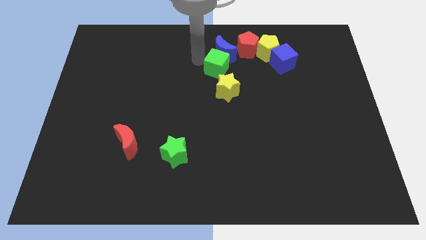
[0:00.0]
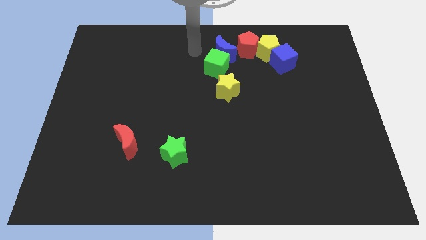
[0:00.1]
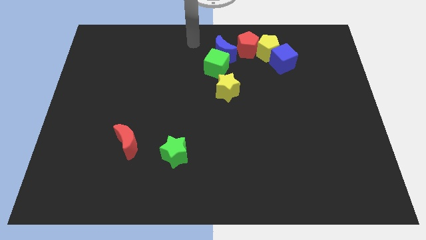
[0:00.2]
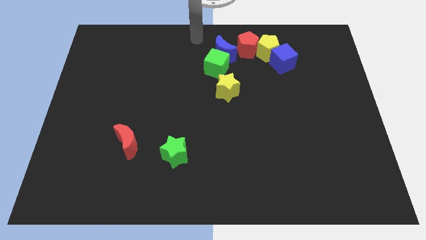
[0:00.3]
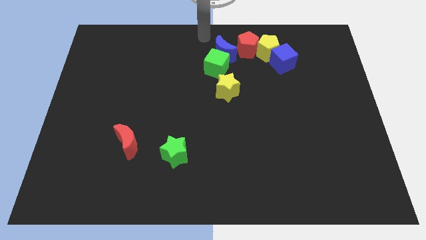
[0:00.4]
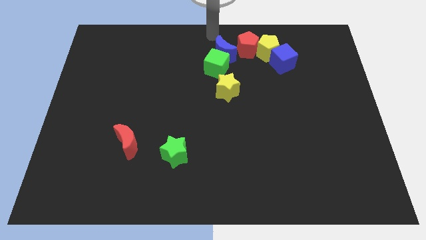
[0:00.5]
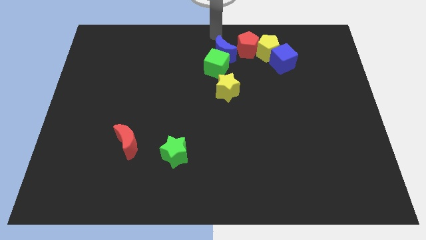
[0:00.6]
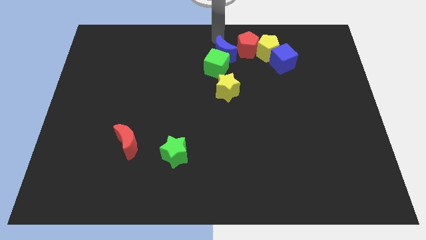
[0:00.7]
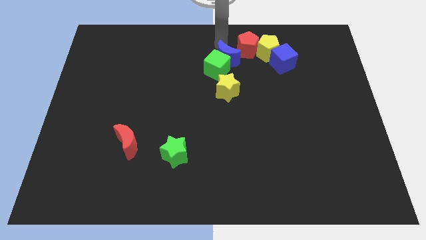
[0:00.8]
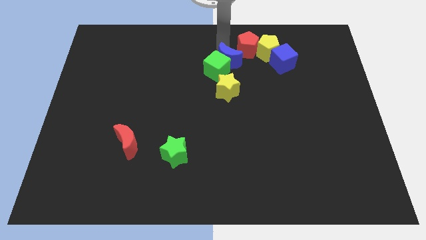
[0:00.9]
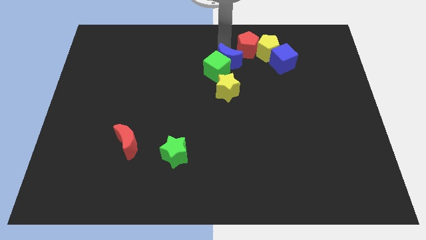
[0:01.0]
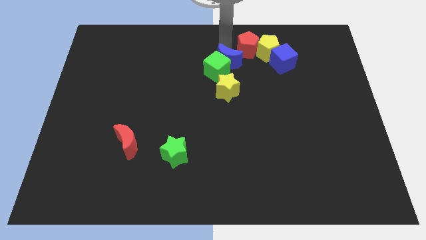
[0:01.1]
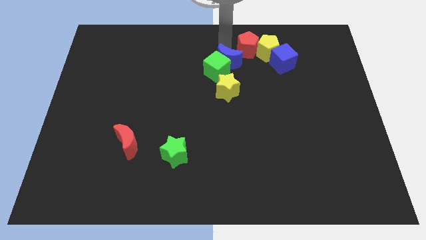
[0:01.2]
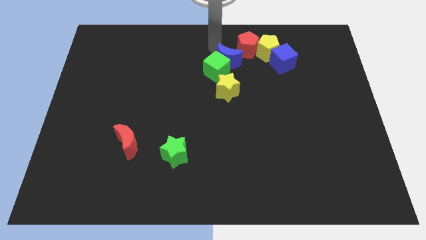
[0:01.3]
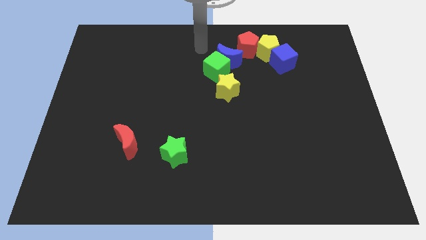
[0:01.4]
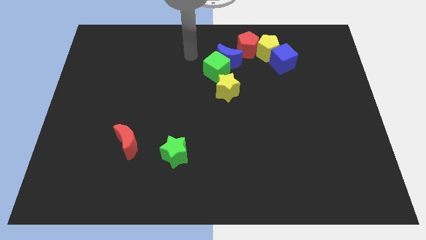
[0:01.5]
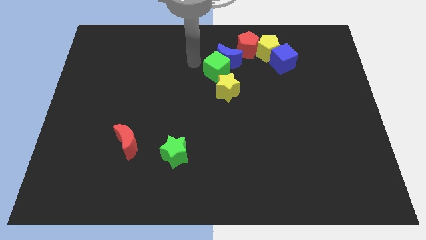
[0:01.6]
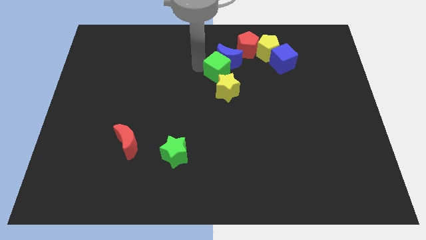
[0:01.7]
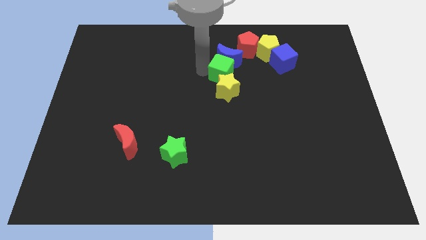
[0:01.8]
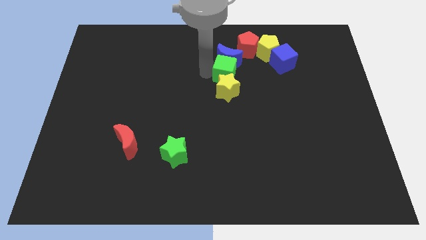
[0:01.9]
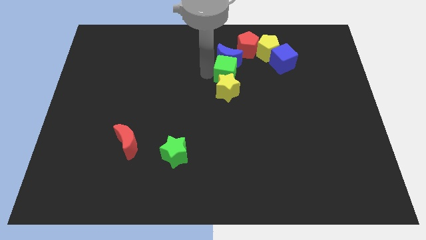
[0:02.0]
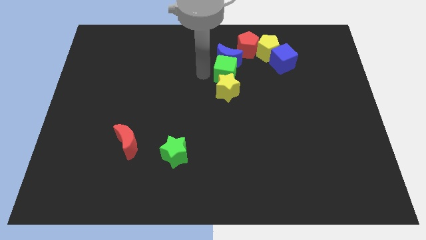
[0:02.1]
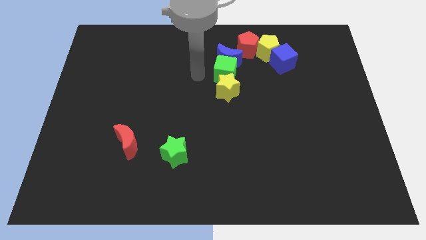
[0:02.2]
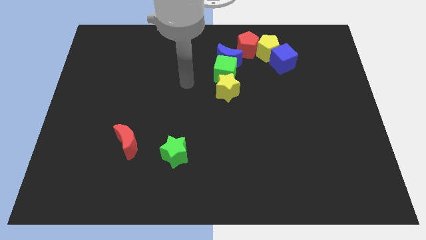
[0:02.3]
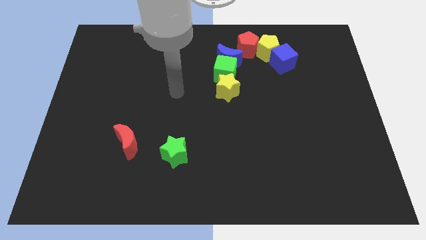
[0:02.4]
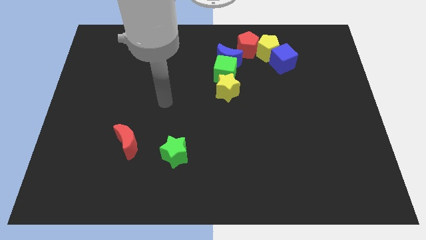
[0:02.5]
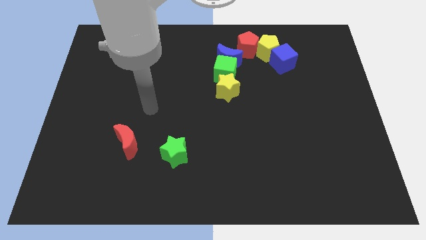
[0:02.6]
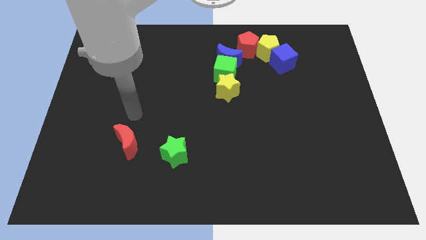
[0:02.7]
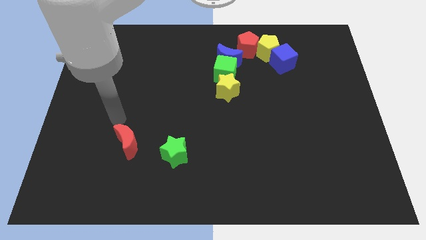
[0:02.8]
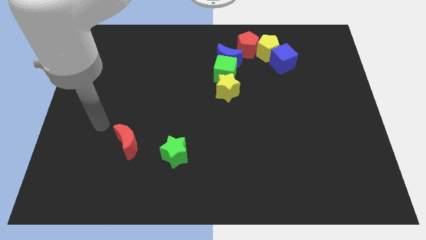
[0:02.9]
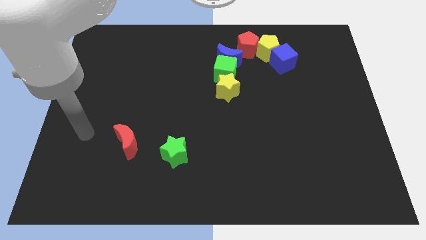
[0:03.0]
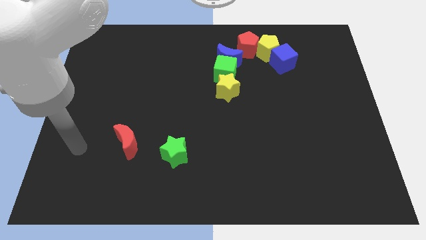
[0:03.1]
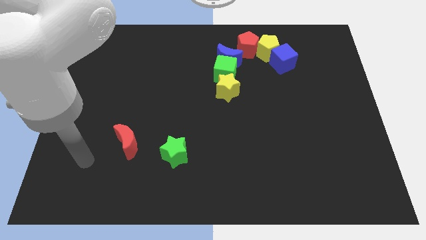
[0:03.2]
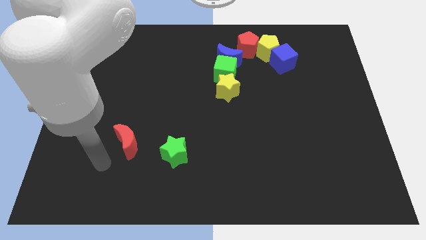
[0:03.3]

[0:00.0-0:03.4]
place the arm to the left of the red moon

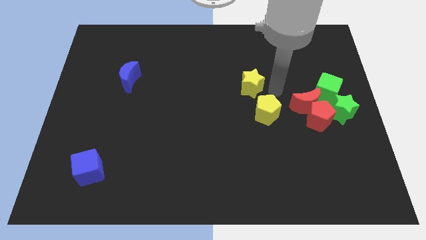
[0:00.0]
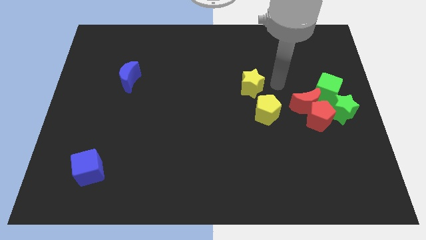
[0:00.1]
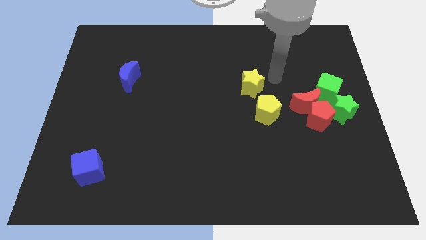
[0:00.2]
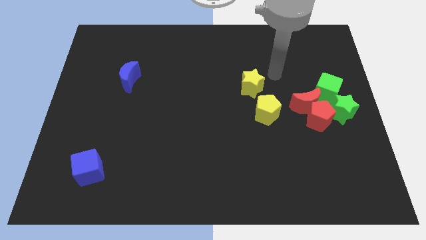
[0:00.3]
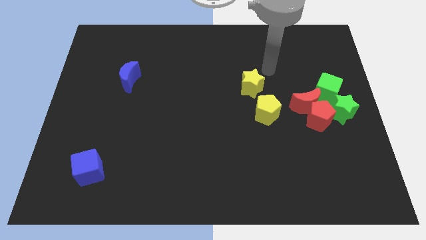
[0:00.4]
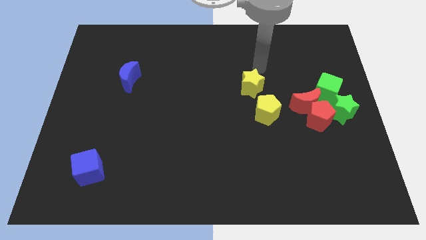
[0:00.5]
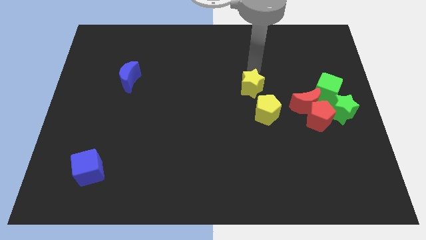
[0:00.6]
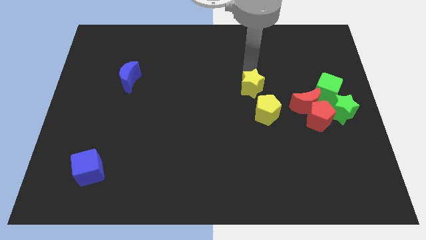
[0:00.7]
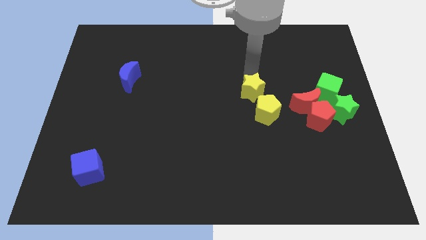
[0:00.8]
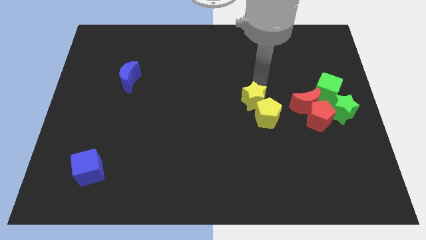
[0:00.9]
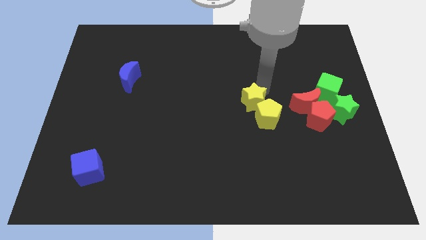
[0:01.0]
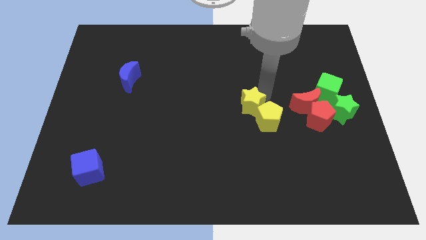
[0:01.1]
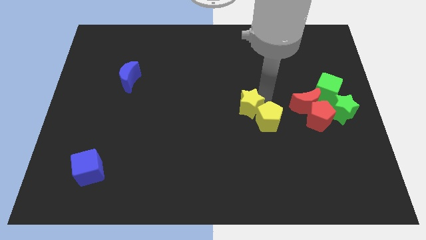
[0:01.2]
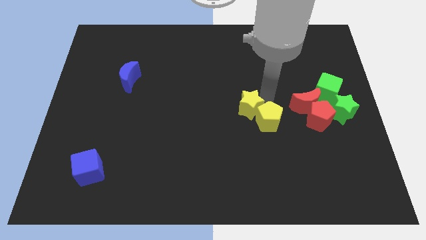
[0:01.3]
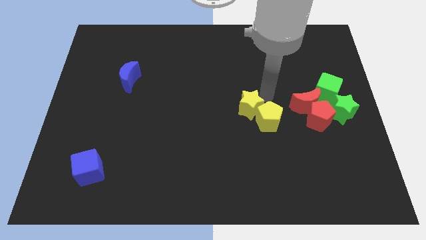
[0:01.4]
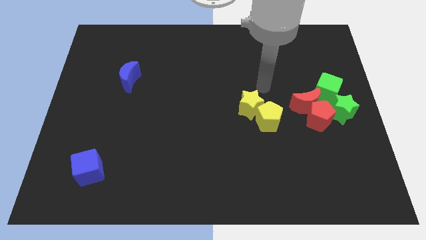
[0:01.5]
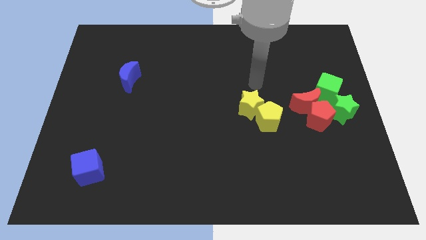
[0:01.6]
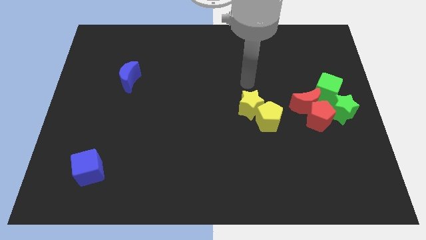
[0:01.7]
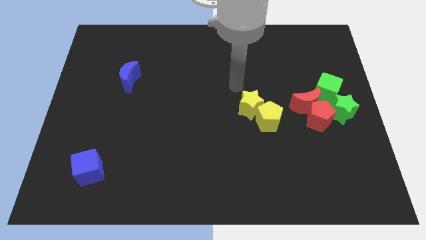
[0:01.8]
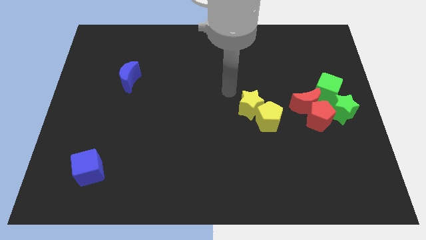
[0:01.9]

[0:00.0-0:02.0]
push the yellow blocks towards the bottom side of the board

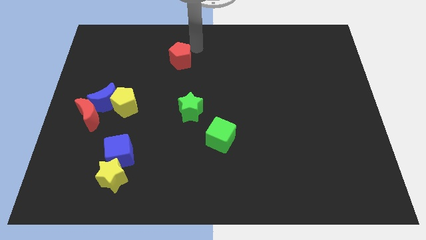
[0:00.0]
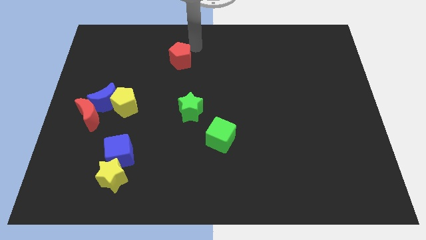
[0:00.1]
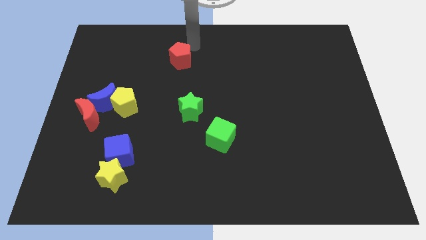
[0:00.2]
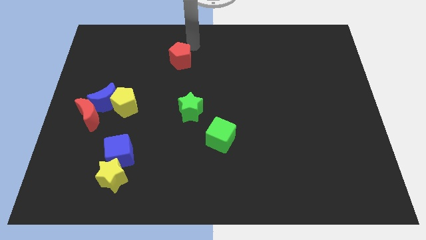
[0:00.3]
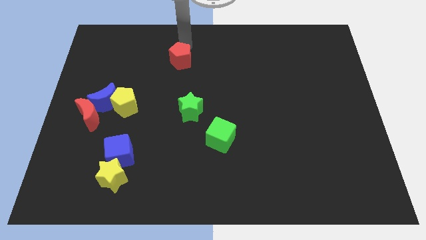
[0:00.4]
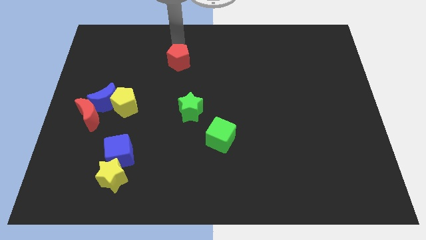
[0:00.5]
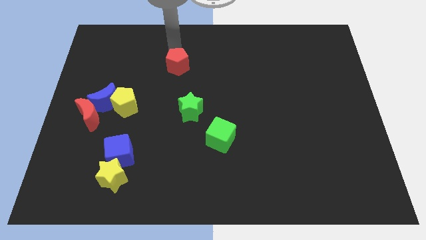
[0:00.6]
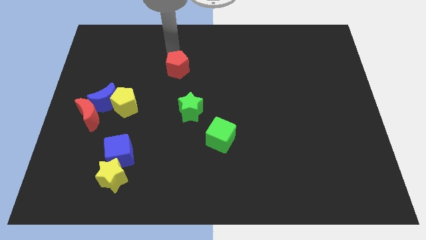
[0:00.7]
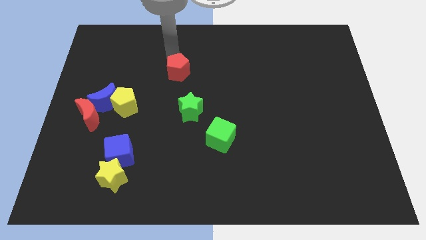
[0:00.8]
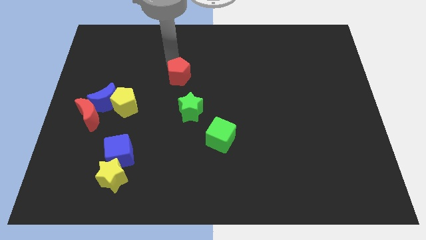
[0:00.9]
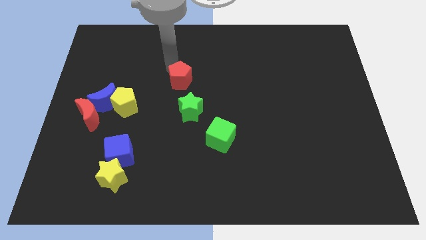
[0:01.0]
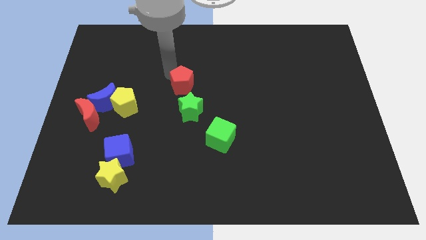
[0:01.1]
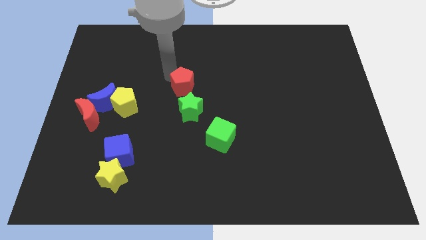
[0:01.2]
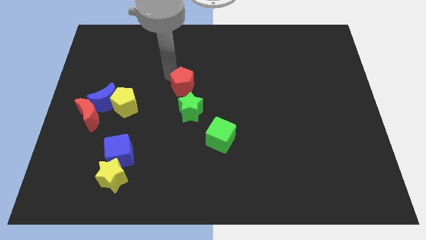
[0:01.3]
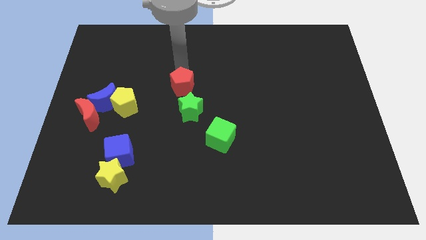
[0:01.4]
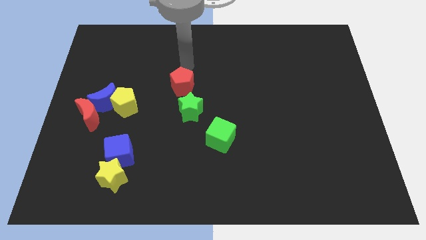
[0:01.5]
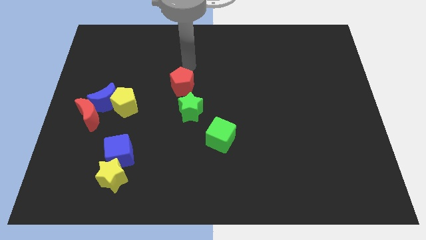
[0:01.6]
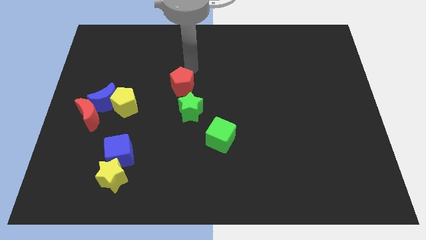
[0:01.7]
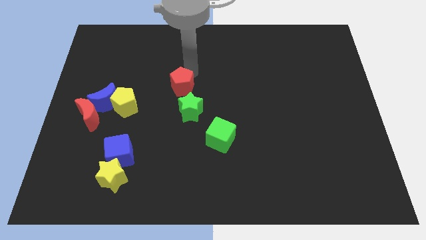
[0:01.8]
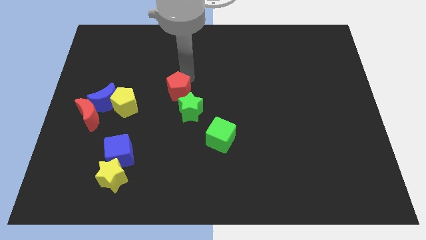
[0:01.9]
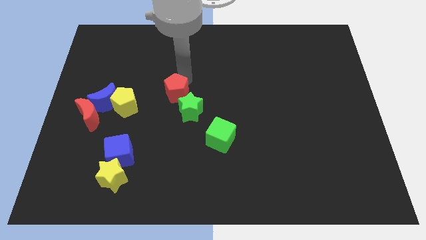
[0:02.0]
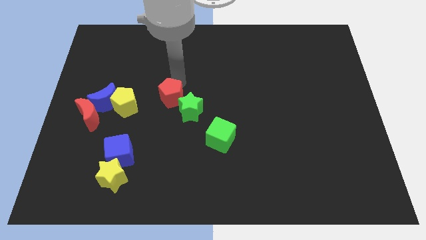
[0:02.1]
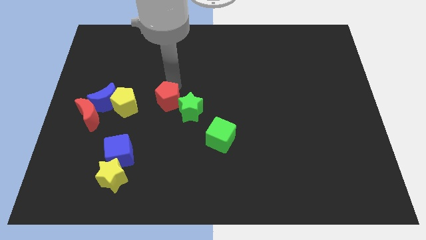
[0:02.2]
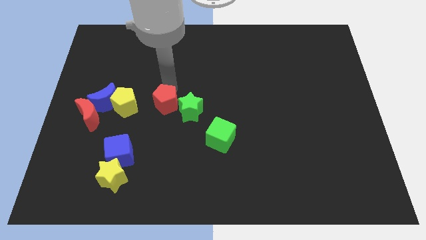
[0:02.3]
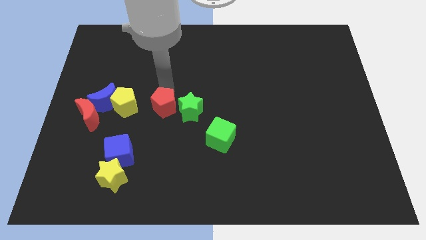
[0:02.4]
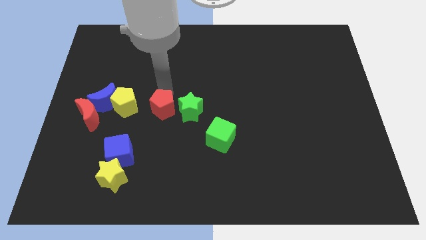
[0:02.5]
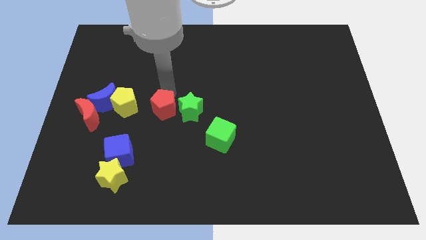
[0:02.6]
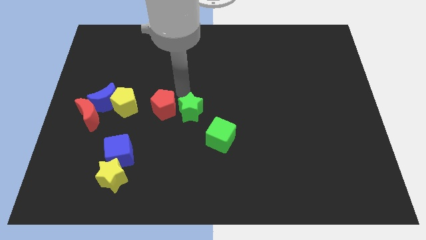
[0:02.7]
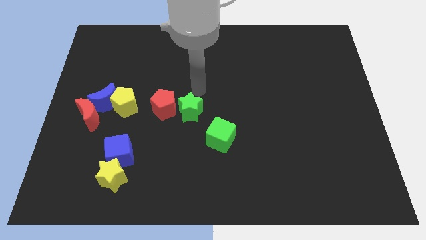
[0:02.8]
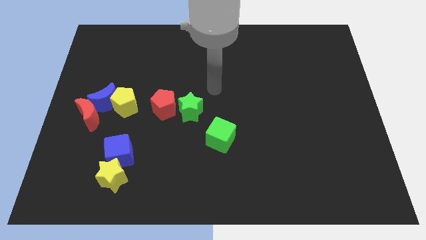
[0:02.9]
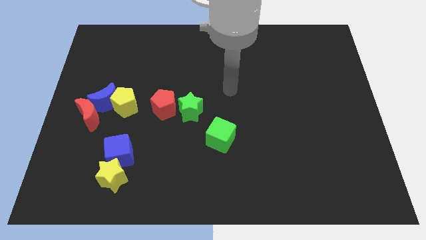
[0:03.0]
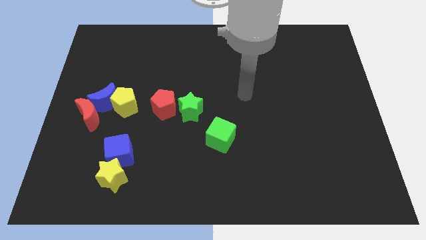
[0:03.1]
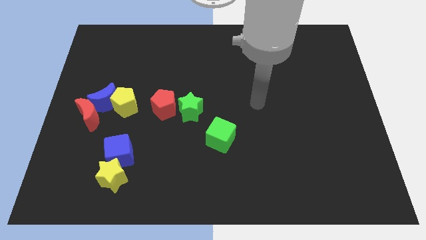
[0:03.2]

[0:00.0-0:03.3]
move the red pentagon right to the yellow pentagon

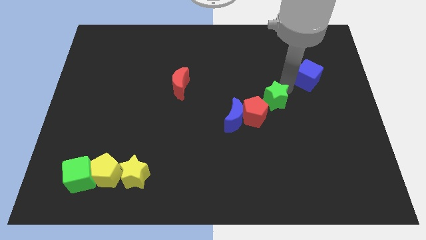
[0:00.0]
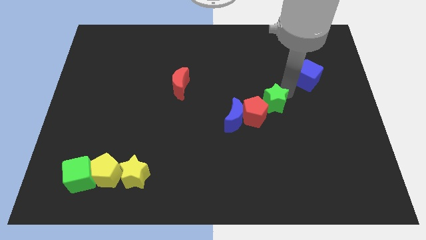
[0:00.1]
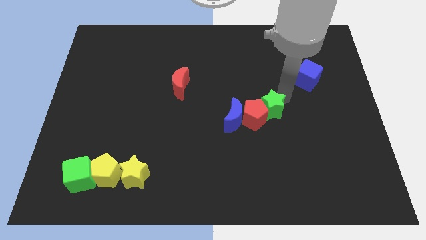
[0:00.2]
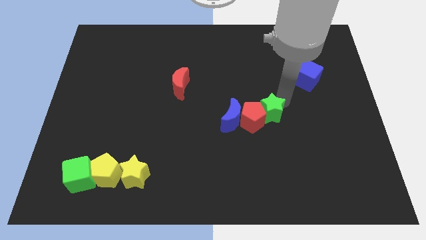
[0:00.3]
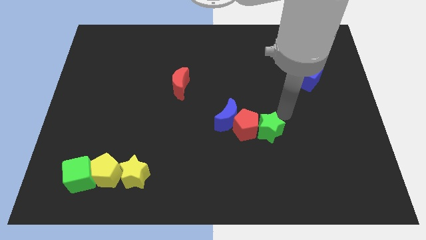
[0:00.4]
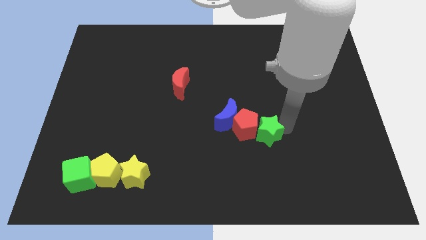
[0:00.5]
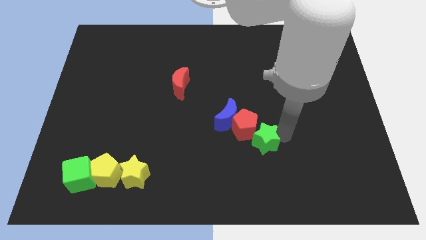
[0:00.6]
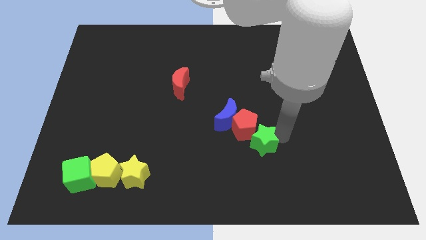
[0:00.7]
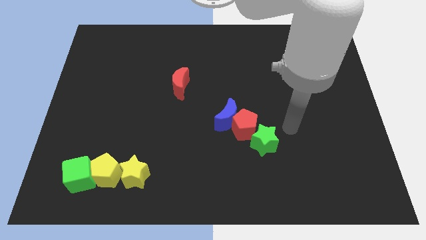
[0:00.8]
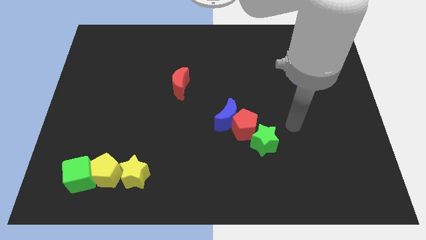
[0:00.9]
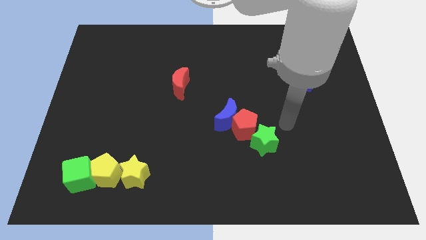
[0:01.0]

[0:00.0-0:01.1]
push green star below red pentagon
